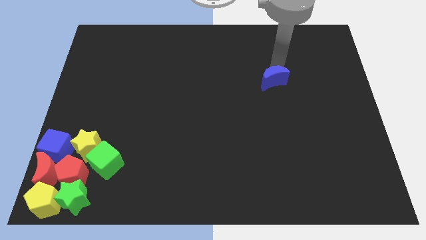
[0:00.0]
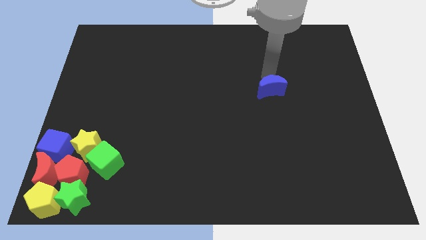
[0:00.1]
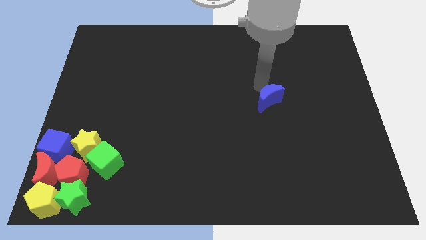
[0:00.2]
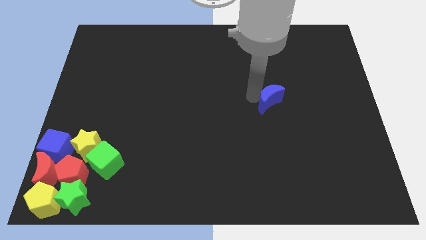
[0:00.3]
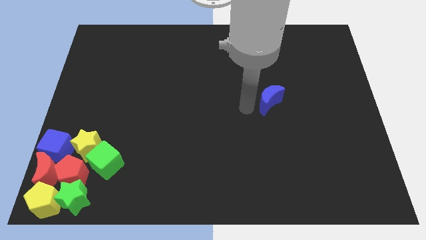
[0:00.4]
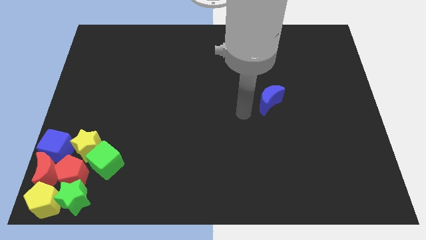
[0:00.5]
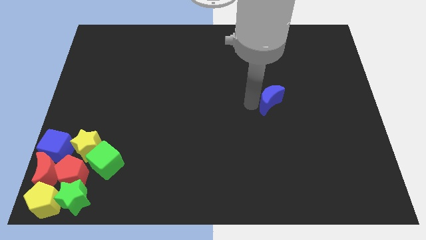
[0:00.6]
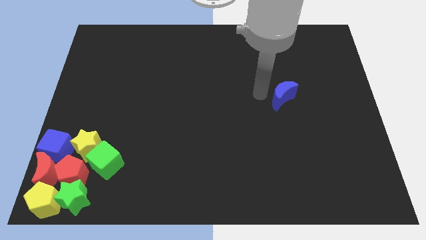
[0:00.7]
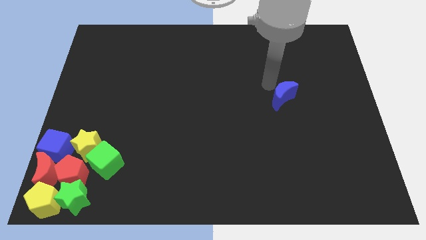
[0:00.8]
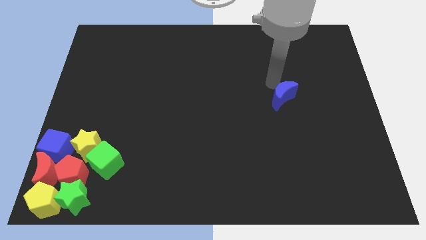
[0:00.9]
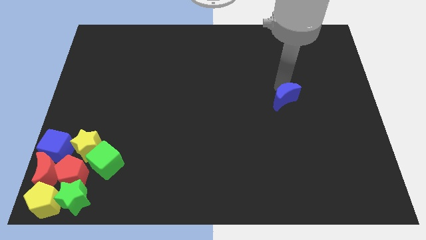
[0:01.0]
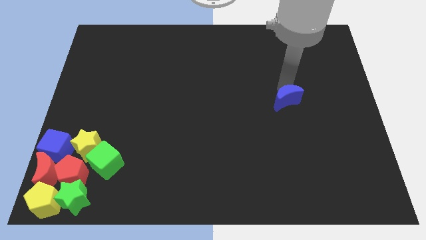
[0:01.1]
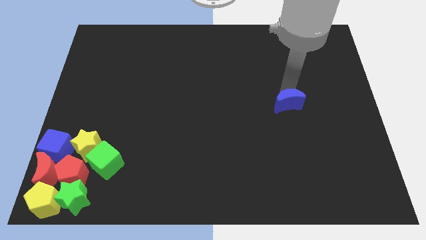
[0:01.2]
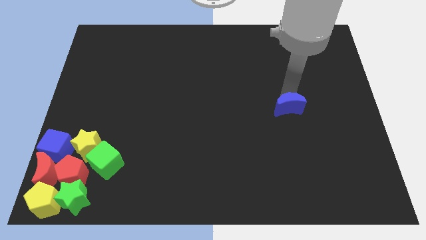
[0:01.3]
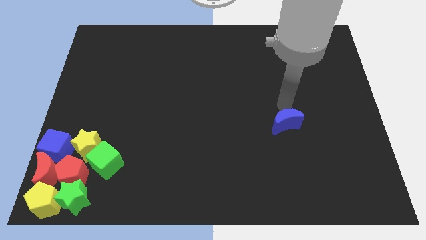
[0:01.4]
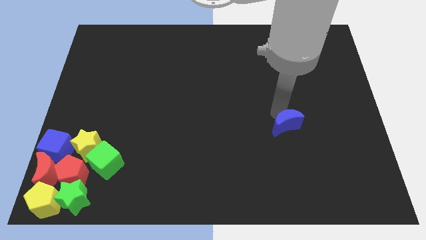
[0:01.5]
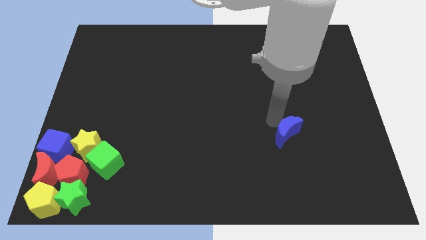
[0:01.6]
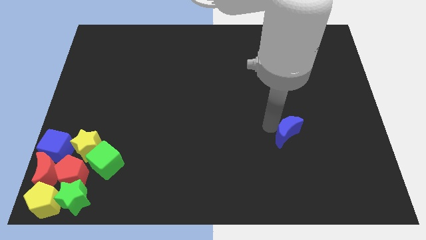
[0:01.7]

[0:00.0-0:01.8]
move the blue moon towards the bottom of the board

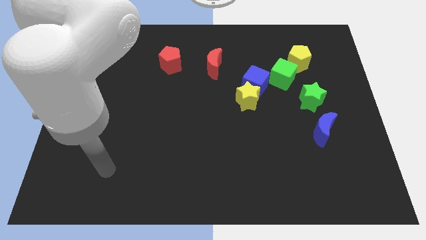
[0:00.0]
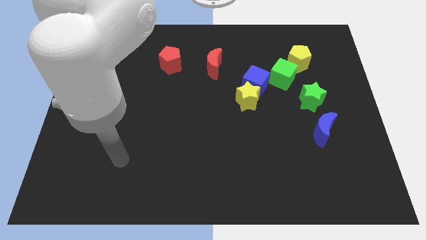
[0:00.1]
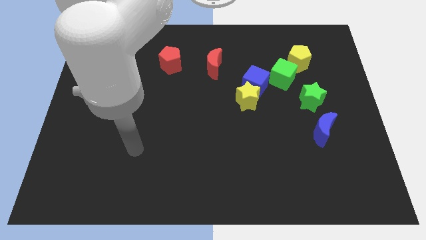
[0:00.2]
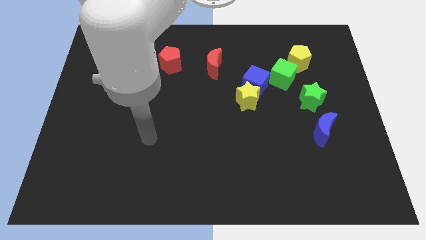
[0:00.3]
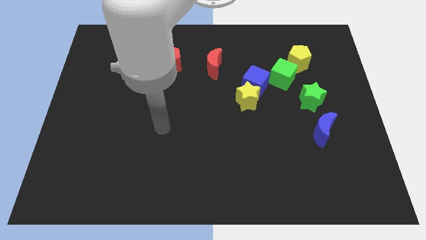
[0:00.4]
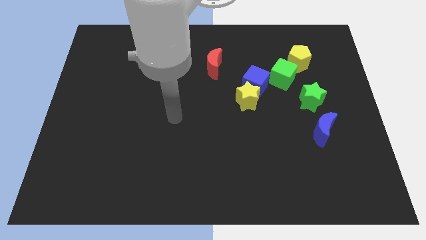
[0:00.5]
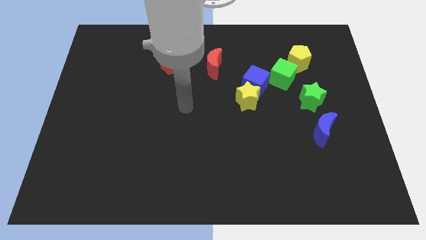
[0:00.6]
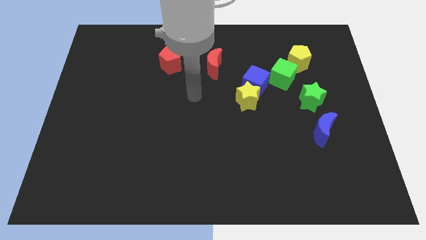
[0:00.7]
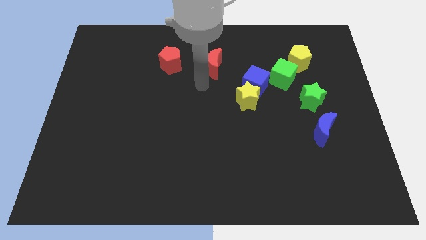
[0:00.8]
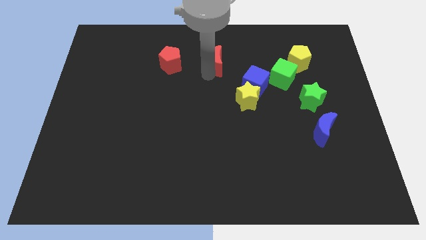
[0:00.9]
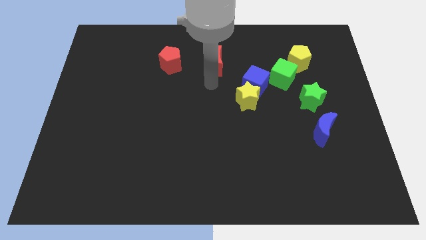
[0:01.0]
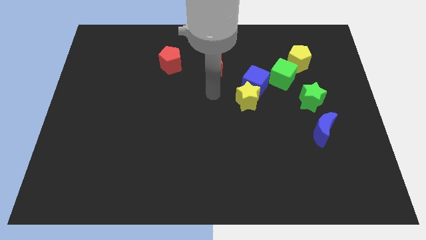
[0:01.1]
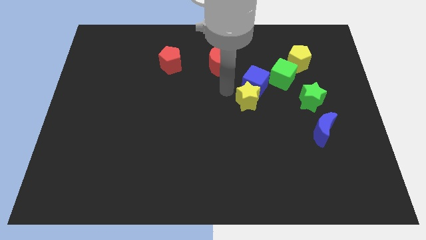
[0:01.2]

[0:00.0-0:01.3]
tap the red crescent

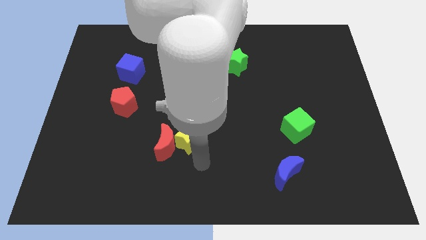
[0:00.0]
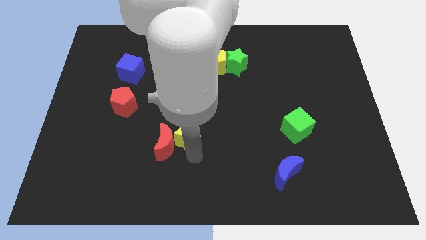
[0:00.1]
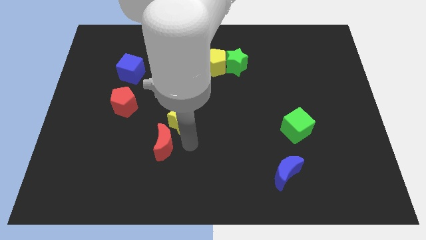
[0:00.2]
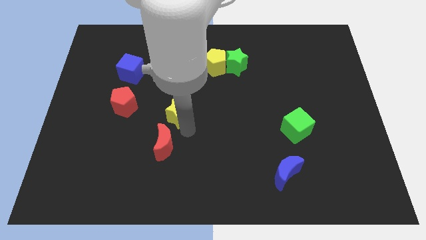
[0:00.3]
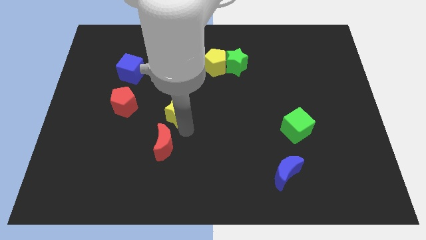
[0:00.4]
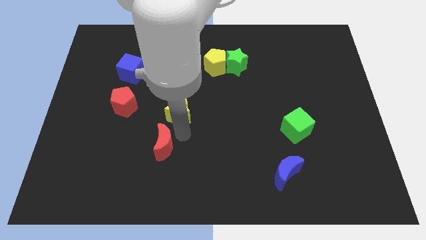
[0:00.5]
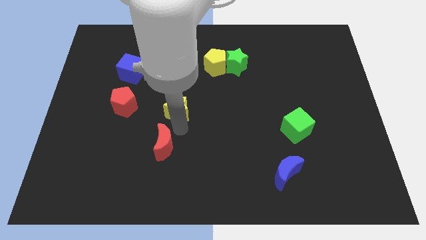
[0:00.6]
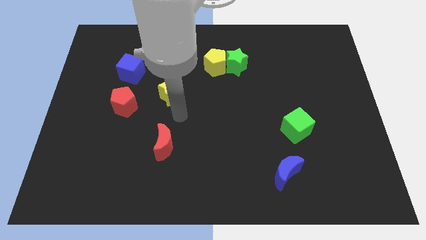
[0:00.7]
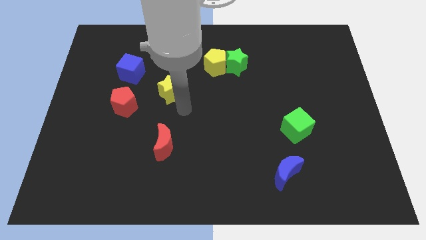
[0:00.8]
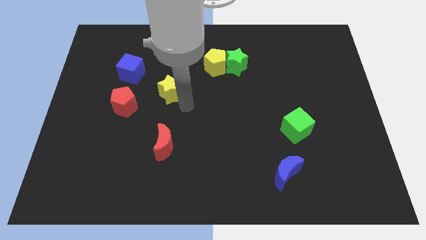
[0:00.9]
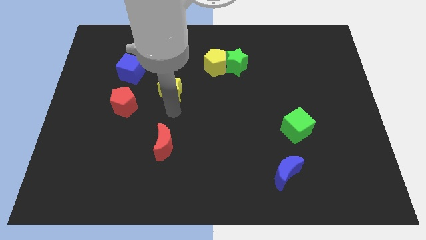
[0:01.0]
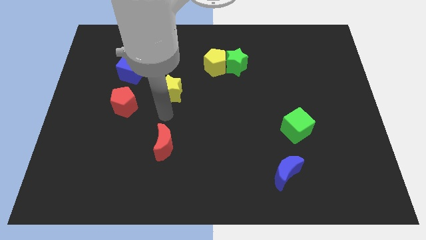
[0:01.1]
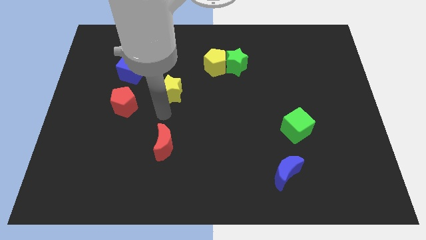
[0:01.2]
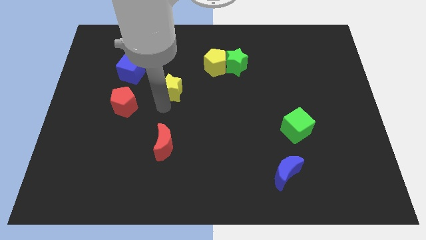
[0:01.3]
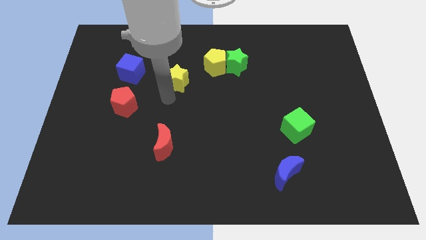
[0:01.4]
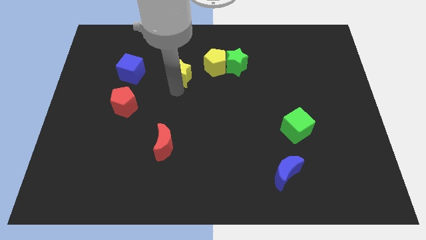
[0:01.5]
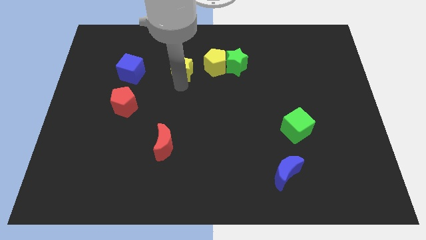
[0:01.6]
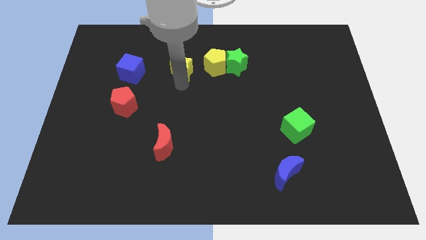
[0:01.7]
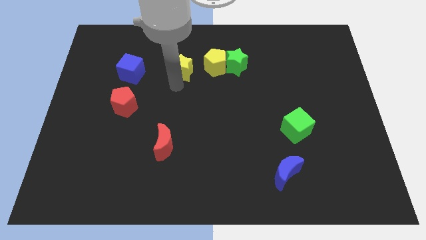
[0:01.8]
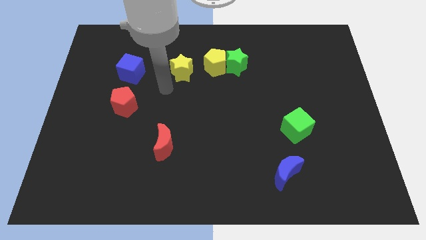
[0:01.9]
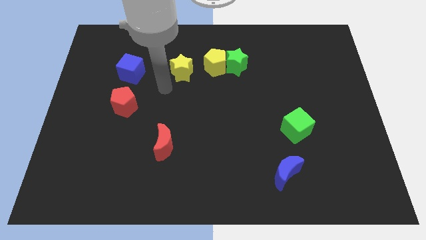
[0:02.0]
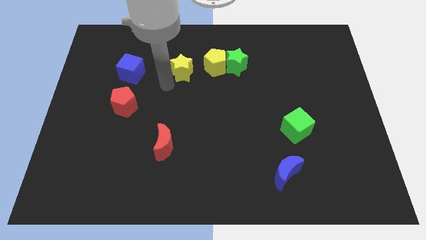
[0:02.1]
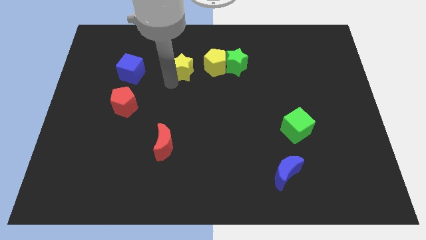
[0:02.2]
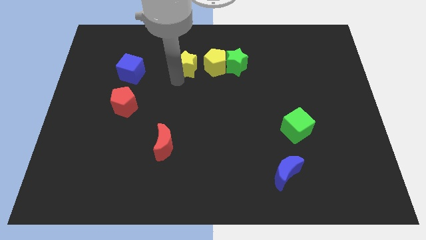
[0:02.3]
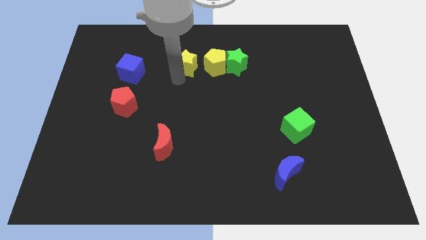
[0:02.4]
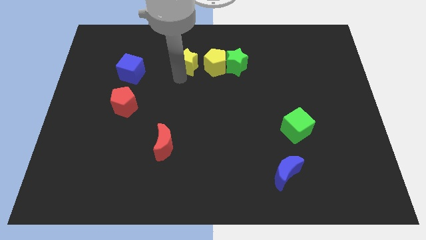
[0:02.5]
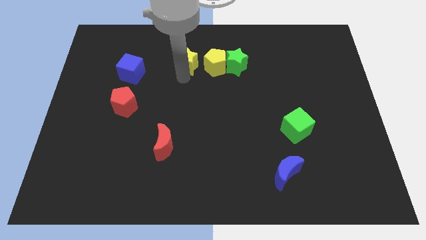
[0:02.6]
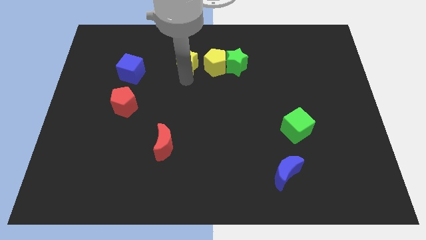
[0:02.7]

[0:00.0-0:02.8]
move the yellow star to the left side of the yellow pentagon

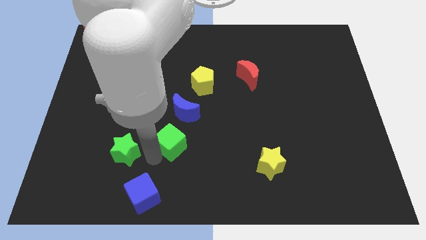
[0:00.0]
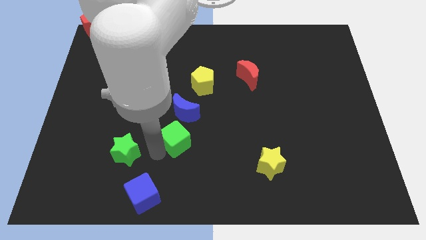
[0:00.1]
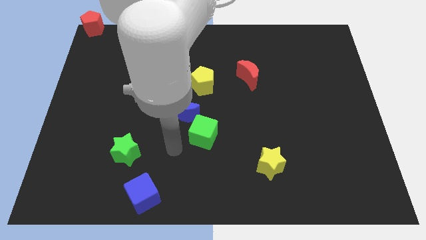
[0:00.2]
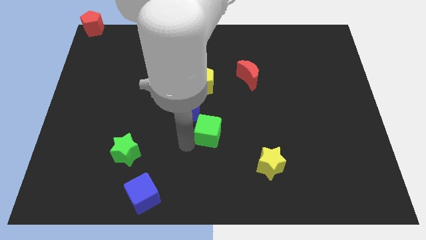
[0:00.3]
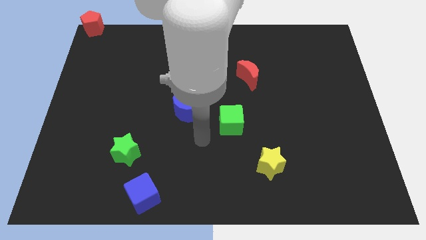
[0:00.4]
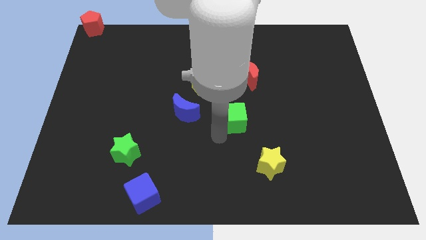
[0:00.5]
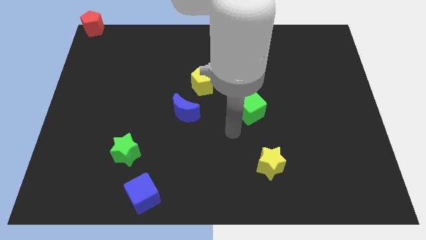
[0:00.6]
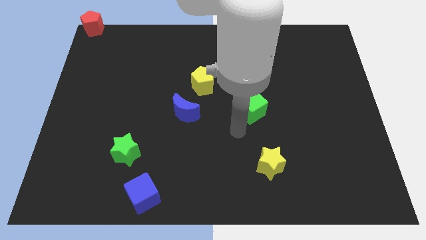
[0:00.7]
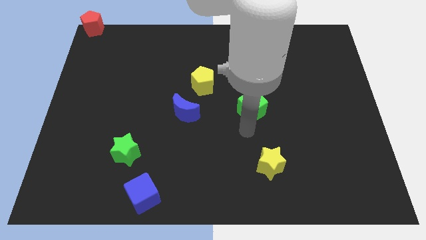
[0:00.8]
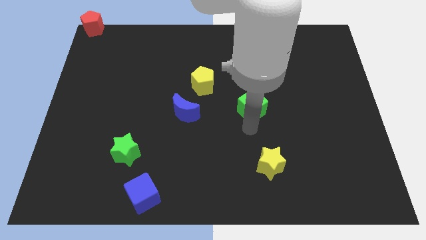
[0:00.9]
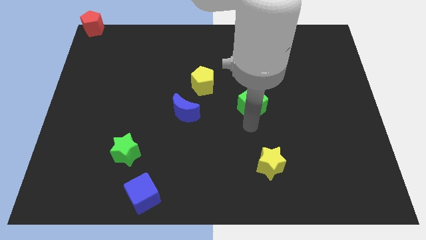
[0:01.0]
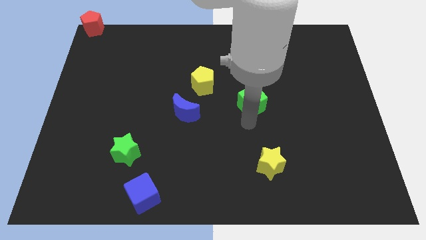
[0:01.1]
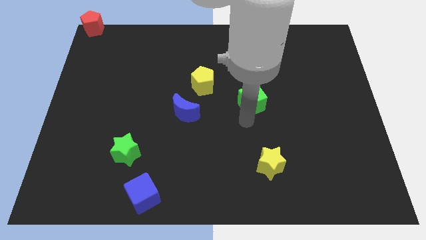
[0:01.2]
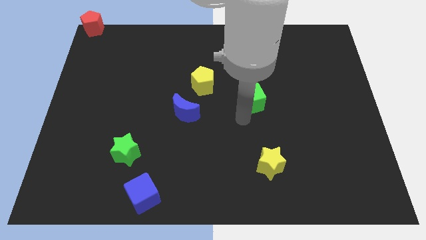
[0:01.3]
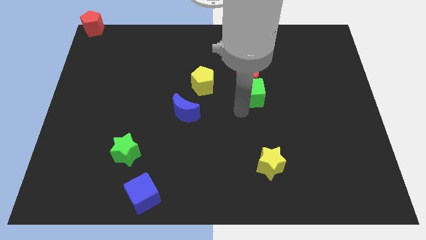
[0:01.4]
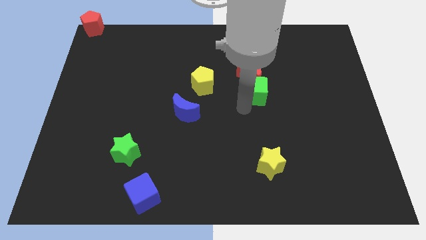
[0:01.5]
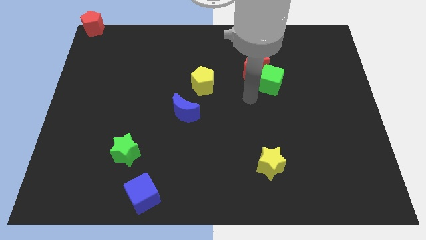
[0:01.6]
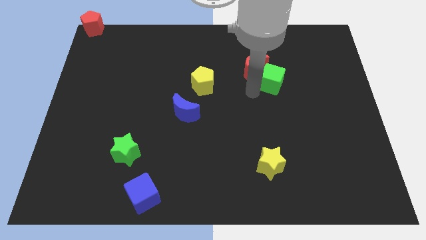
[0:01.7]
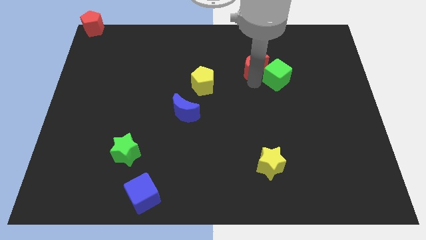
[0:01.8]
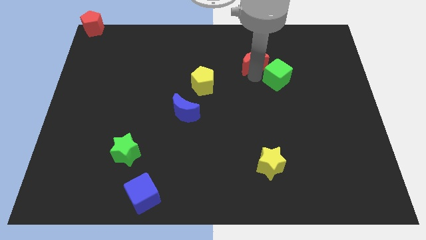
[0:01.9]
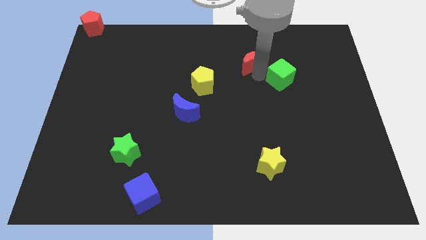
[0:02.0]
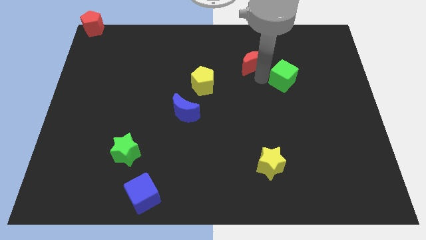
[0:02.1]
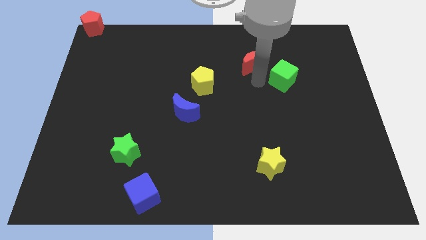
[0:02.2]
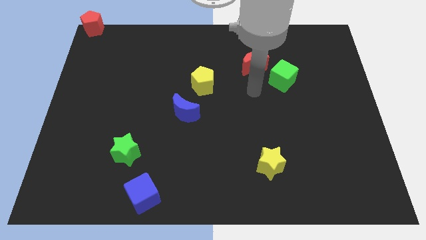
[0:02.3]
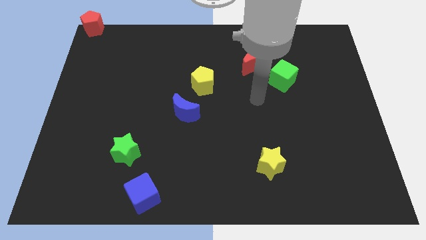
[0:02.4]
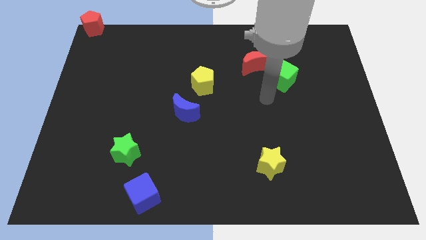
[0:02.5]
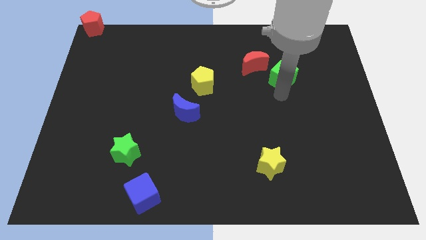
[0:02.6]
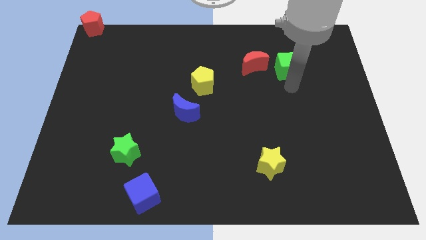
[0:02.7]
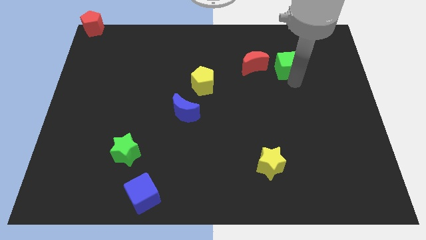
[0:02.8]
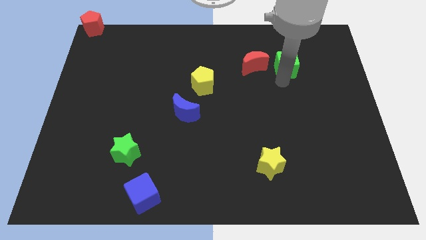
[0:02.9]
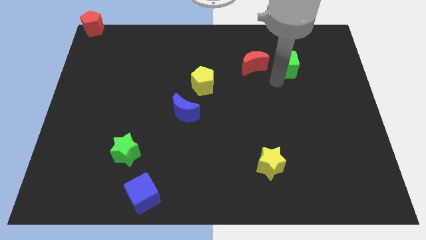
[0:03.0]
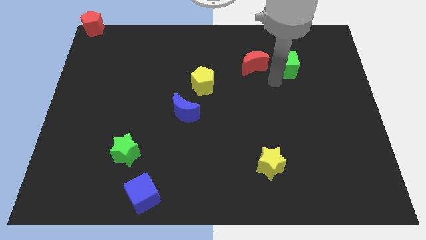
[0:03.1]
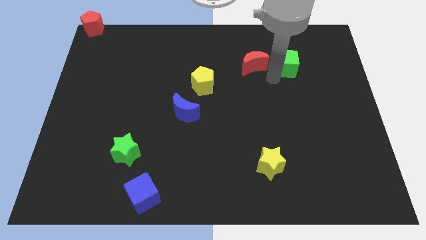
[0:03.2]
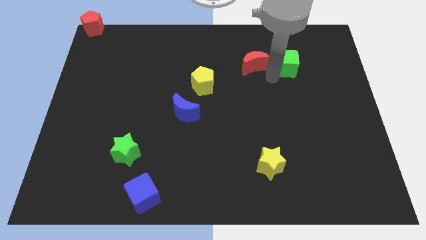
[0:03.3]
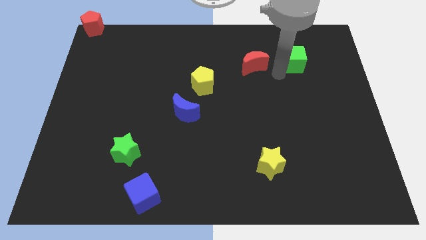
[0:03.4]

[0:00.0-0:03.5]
push the green cube to the right of the red crescent
